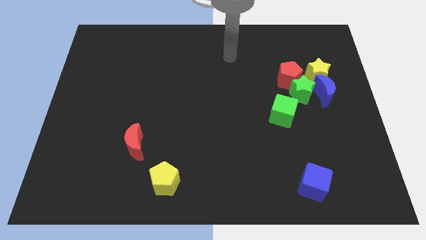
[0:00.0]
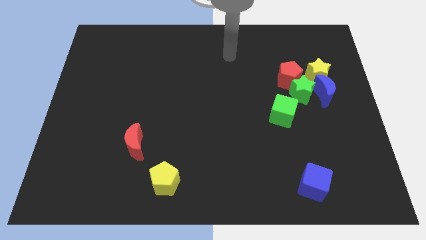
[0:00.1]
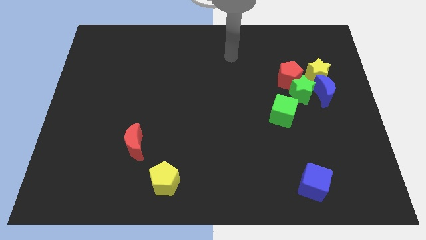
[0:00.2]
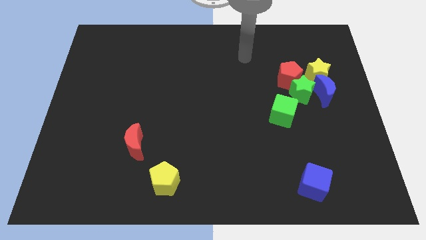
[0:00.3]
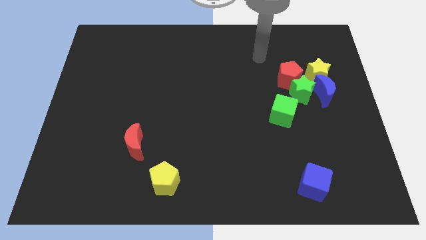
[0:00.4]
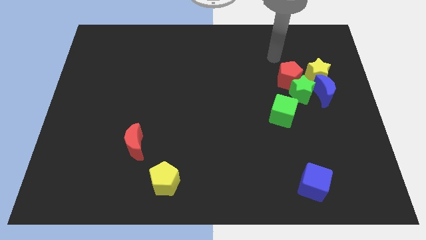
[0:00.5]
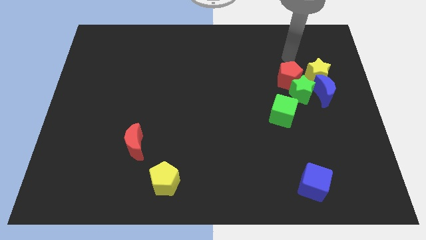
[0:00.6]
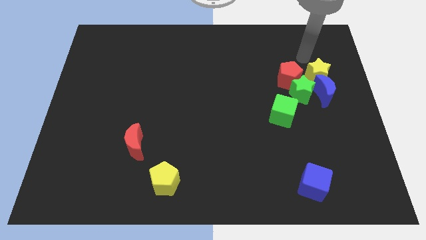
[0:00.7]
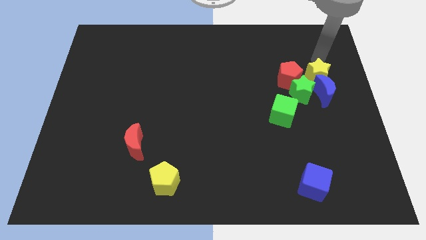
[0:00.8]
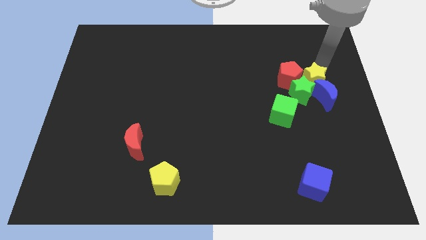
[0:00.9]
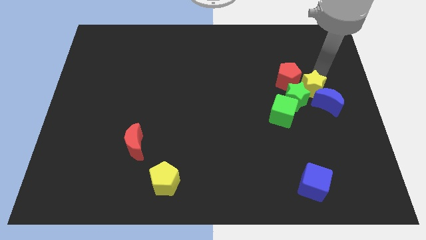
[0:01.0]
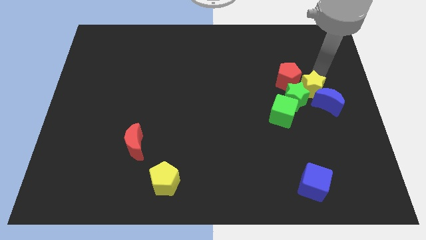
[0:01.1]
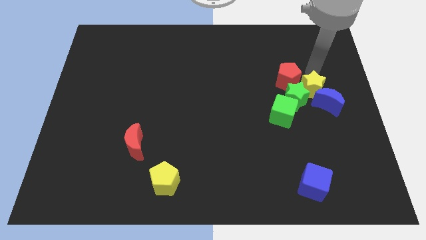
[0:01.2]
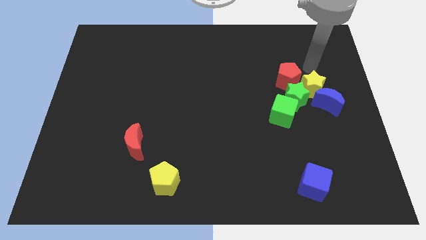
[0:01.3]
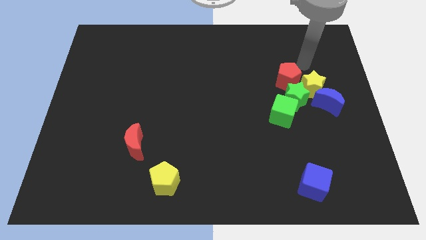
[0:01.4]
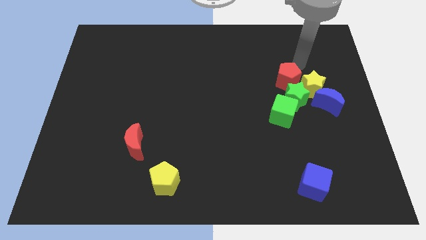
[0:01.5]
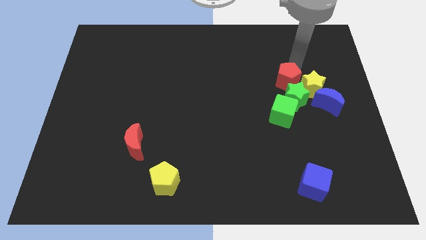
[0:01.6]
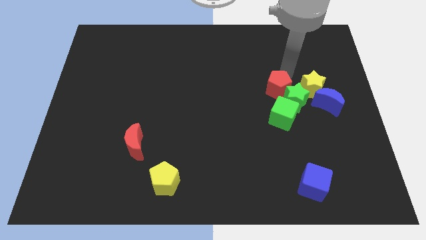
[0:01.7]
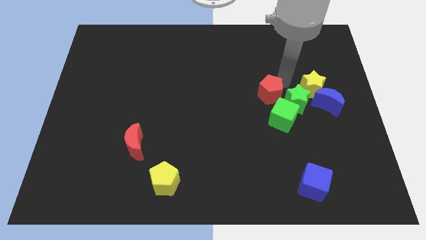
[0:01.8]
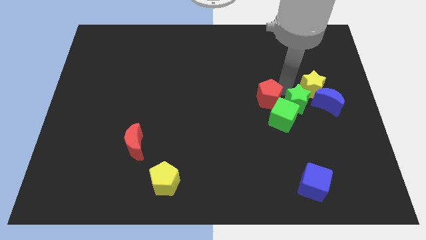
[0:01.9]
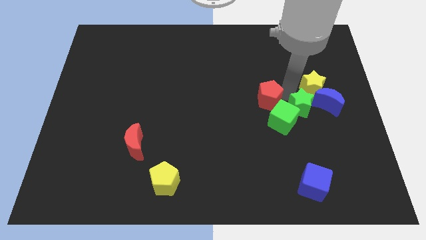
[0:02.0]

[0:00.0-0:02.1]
place the yellow star into the red pentagon and blue crescent

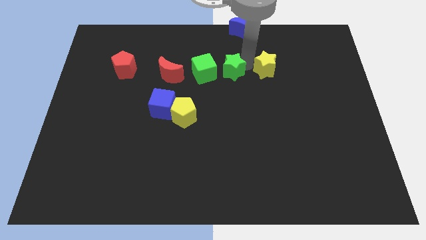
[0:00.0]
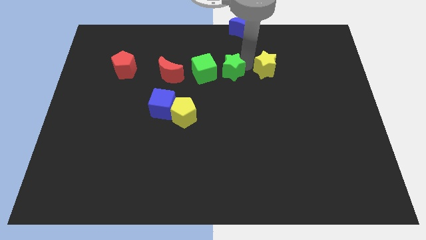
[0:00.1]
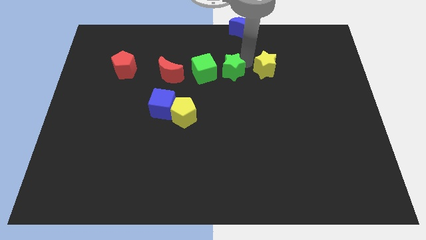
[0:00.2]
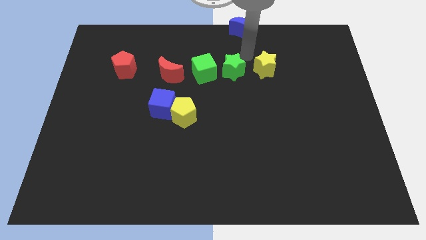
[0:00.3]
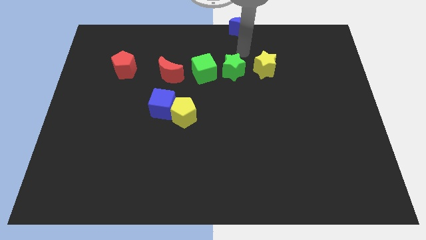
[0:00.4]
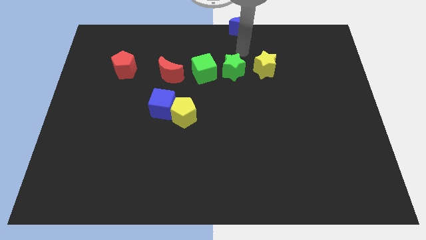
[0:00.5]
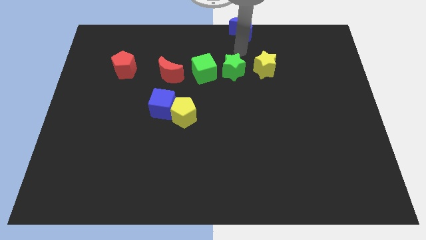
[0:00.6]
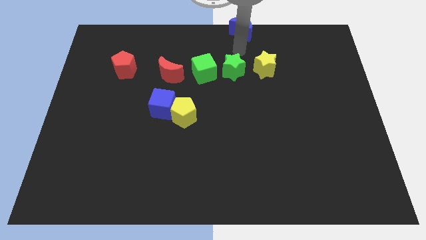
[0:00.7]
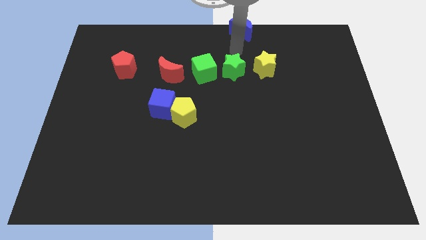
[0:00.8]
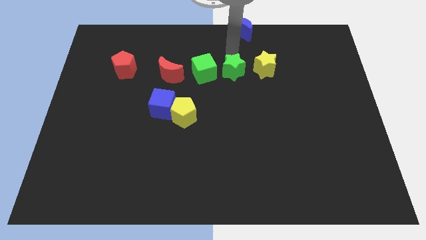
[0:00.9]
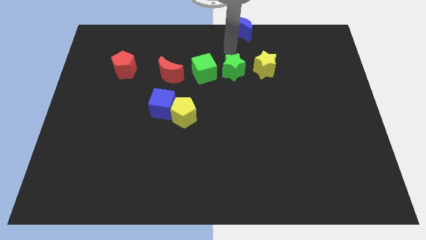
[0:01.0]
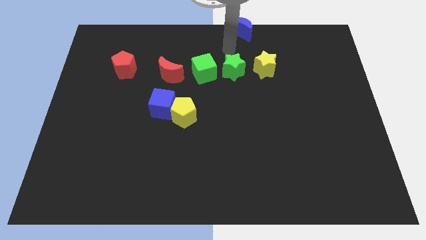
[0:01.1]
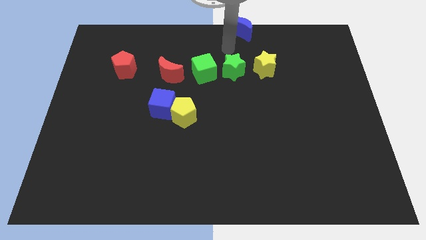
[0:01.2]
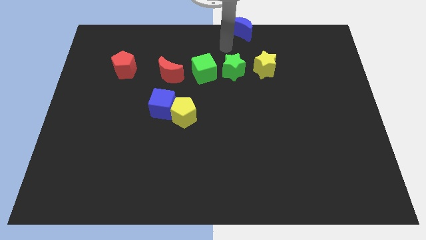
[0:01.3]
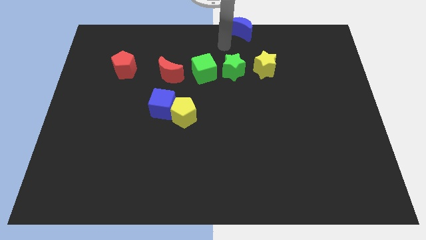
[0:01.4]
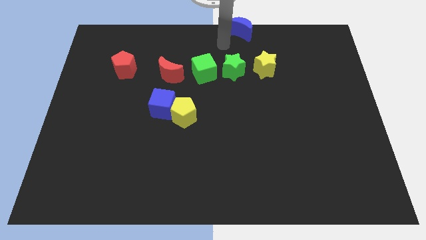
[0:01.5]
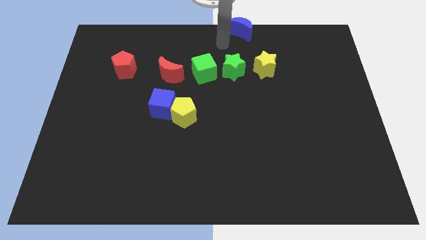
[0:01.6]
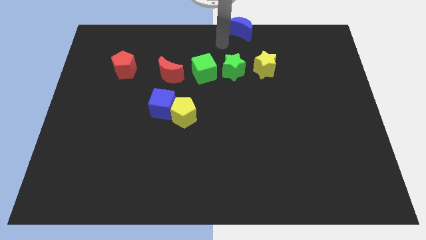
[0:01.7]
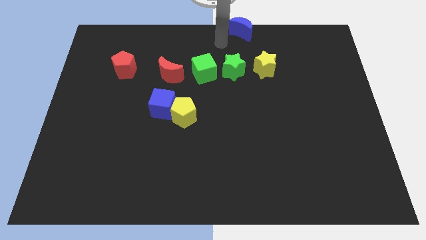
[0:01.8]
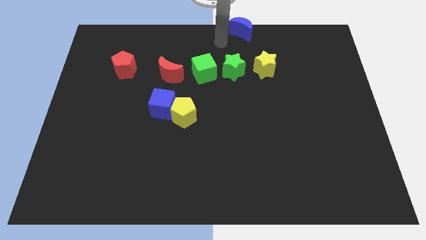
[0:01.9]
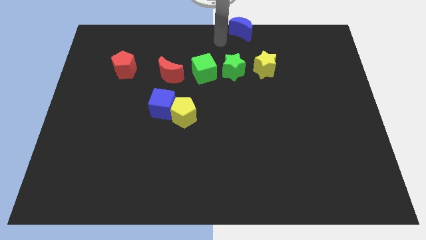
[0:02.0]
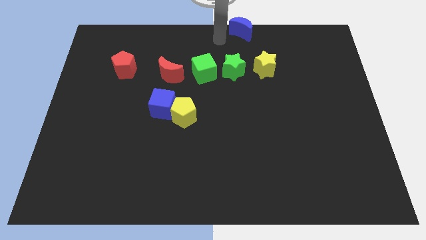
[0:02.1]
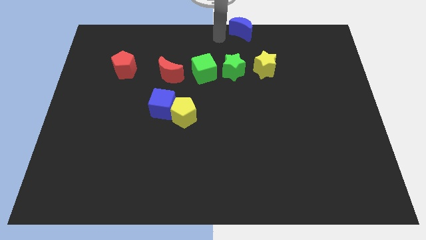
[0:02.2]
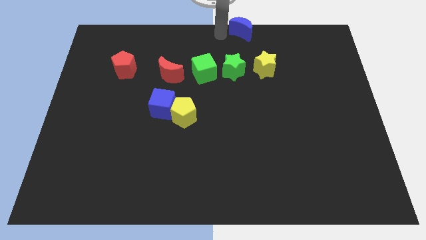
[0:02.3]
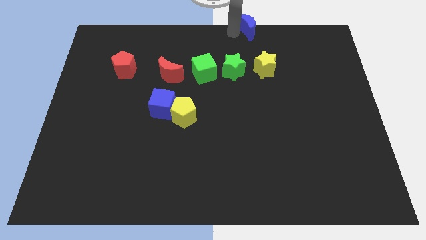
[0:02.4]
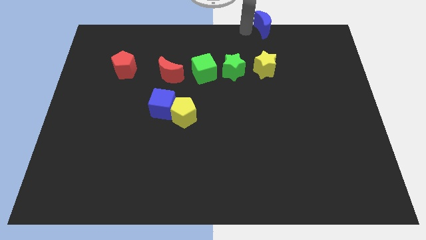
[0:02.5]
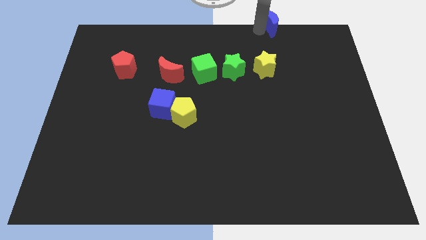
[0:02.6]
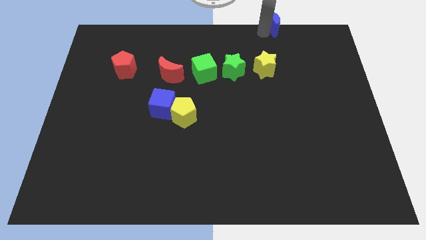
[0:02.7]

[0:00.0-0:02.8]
slightly push the blue semi circle to the right

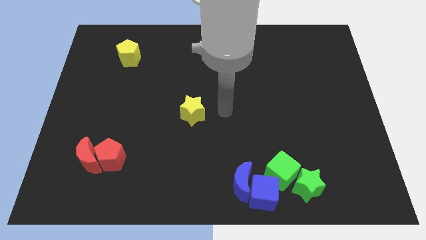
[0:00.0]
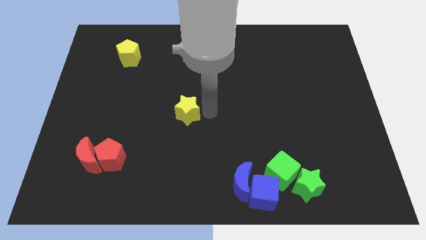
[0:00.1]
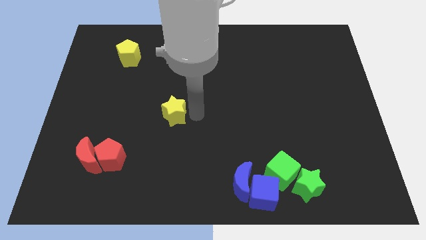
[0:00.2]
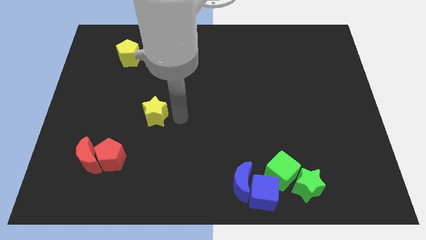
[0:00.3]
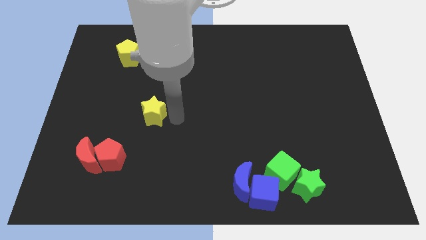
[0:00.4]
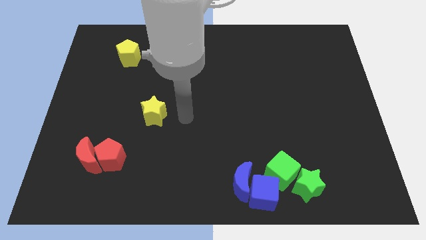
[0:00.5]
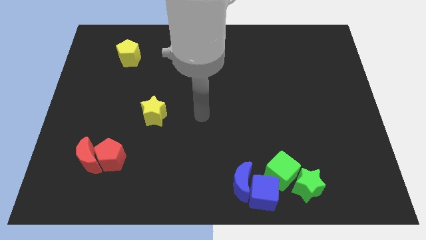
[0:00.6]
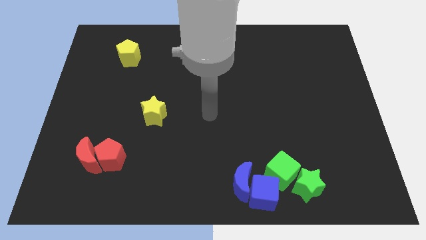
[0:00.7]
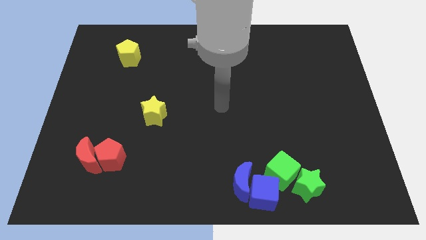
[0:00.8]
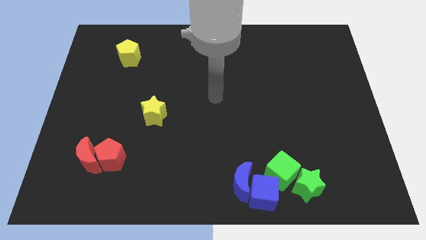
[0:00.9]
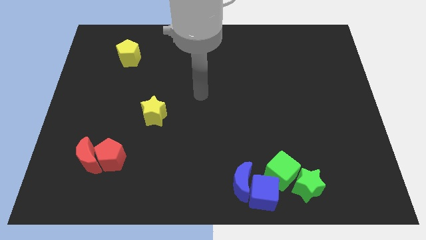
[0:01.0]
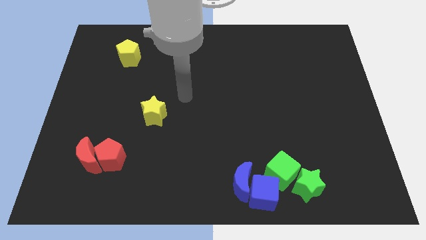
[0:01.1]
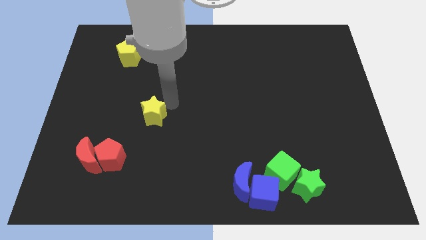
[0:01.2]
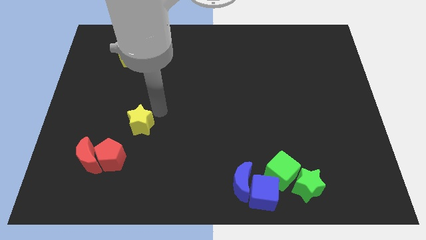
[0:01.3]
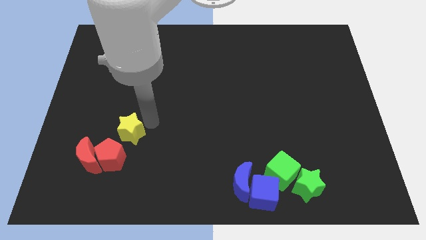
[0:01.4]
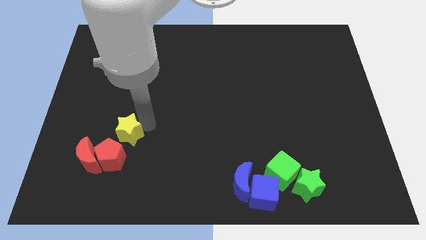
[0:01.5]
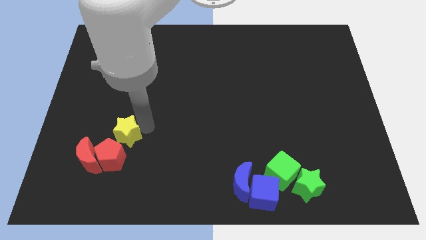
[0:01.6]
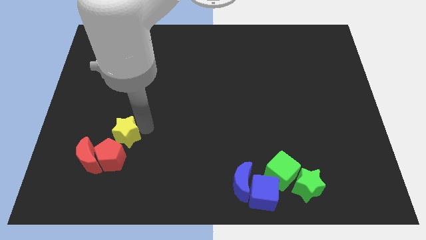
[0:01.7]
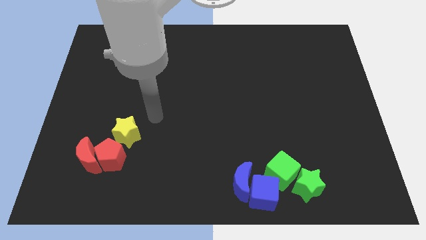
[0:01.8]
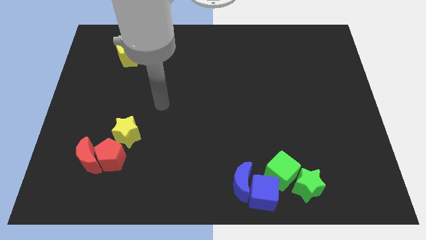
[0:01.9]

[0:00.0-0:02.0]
push the yellow star close to the red pentagon

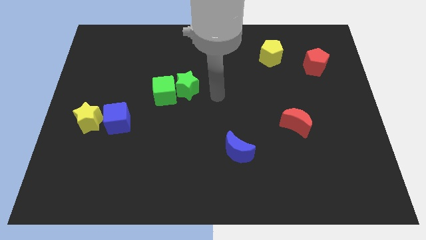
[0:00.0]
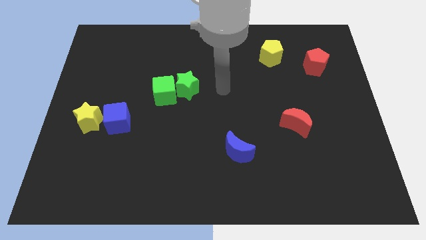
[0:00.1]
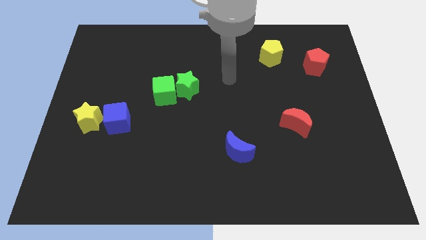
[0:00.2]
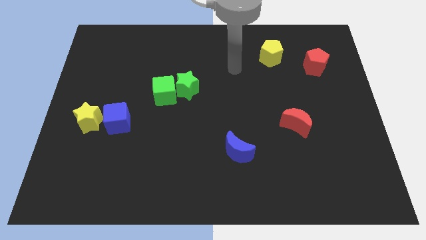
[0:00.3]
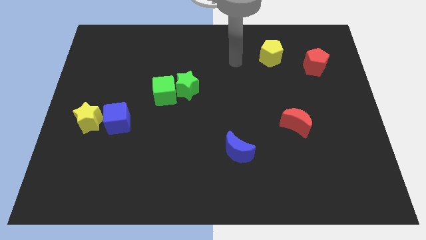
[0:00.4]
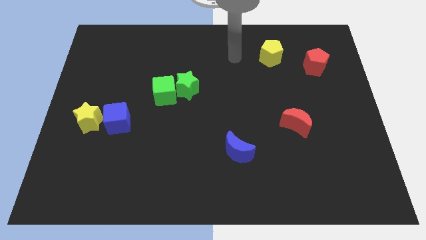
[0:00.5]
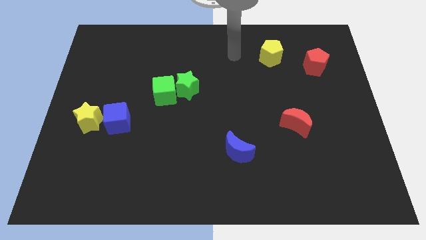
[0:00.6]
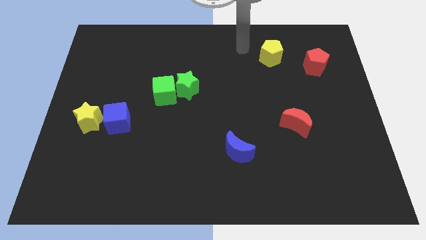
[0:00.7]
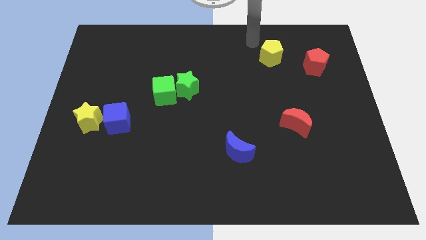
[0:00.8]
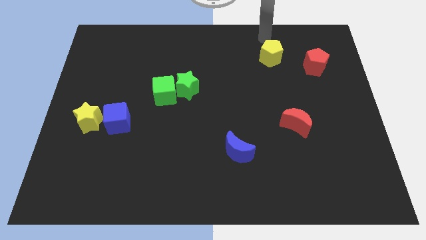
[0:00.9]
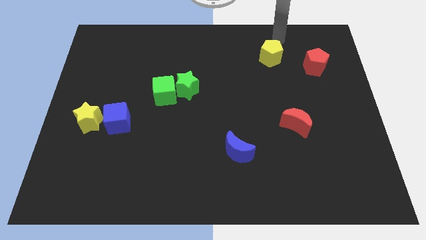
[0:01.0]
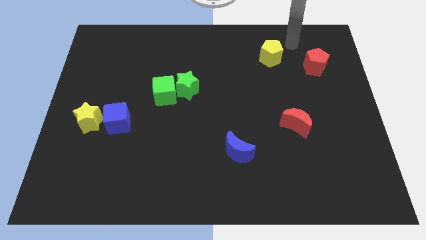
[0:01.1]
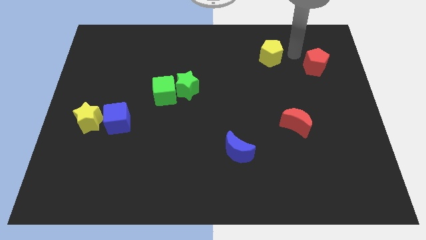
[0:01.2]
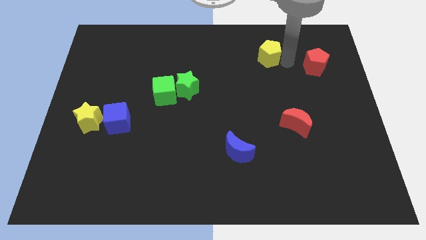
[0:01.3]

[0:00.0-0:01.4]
tap the yellow pentagon

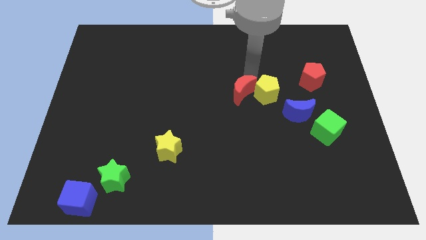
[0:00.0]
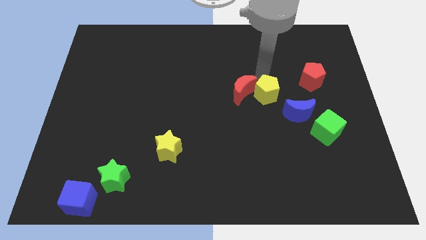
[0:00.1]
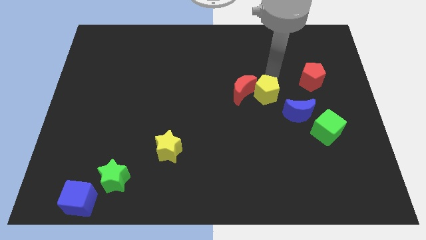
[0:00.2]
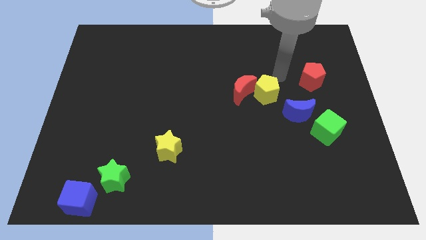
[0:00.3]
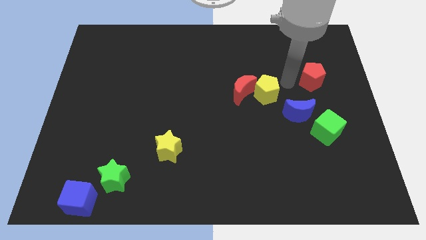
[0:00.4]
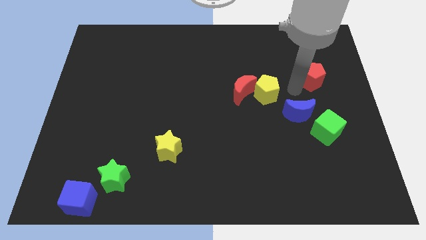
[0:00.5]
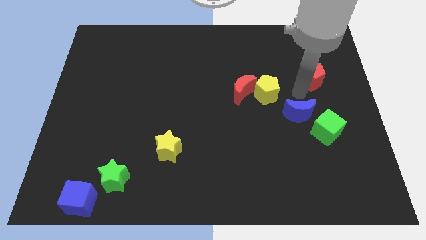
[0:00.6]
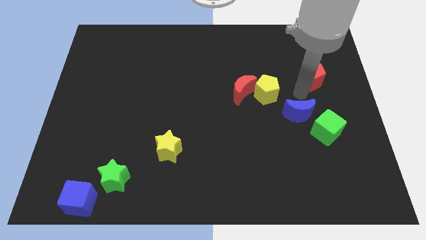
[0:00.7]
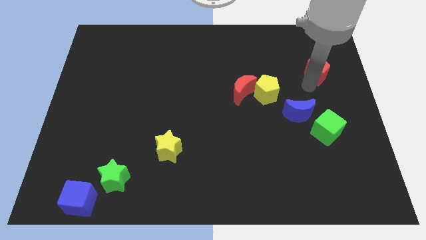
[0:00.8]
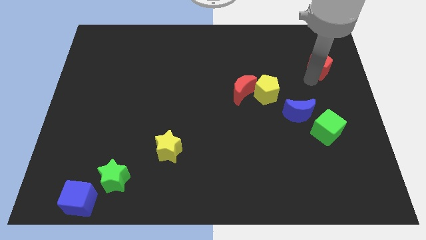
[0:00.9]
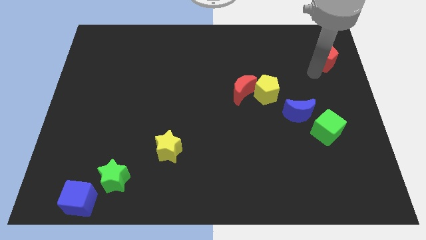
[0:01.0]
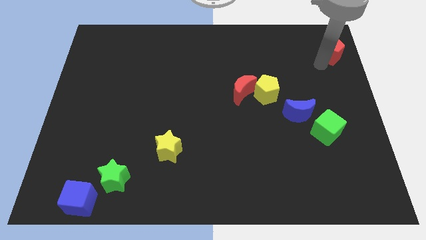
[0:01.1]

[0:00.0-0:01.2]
push the red pentagon towards the top side of the board
